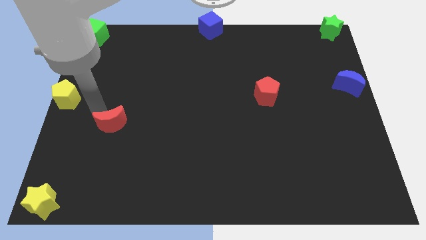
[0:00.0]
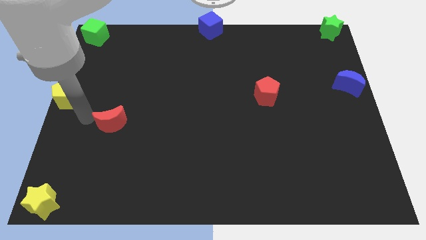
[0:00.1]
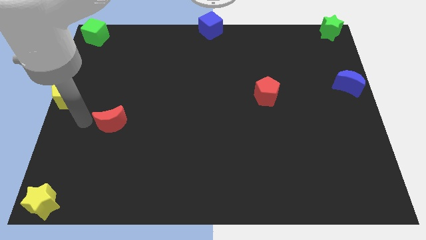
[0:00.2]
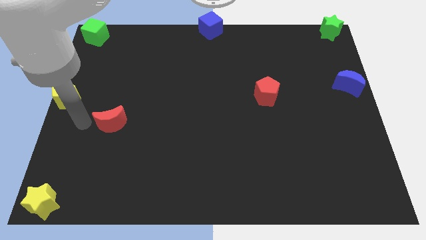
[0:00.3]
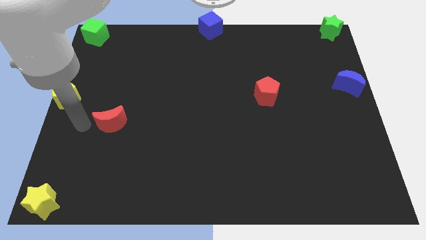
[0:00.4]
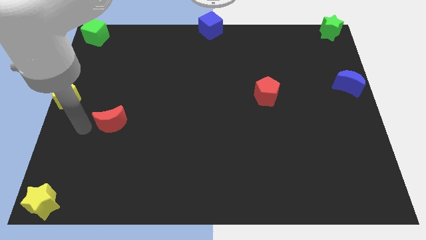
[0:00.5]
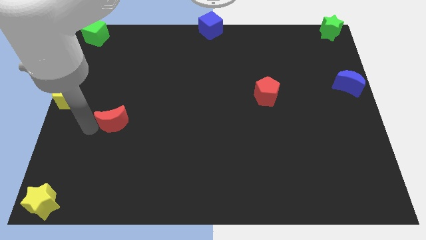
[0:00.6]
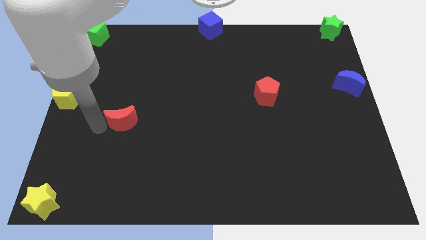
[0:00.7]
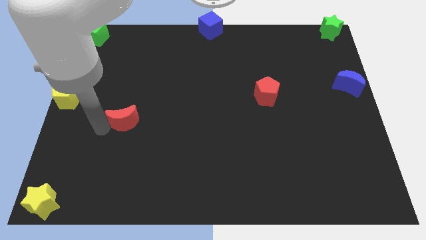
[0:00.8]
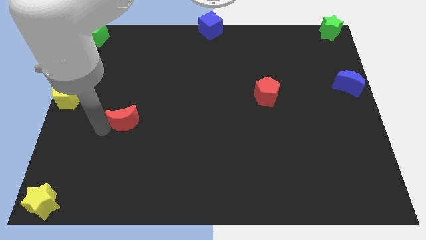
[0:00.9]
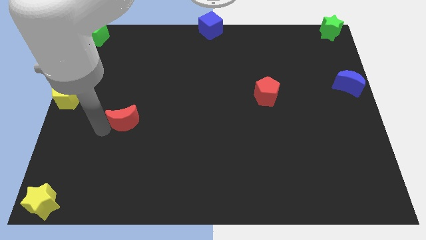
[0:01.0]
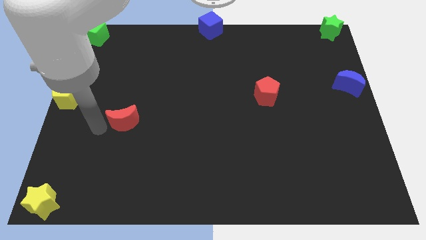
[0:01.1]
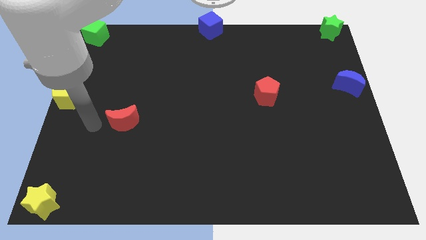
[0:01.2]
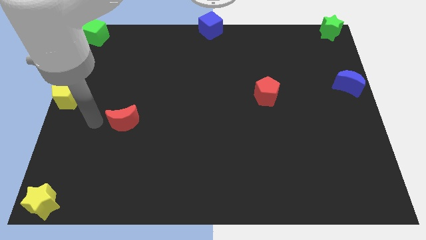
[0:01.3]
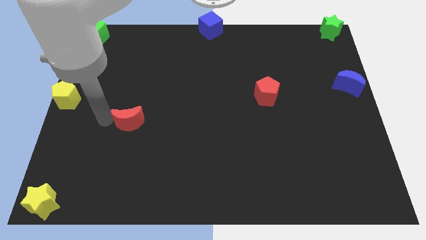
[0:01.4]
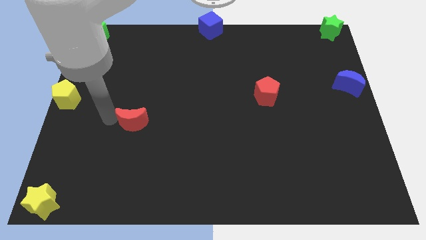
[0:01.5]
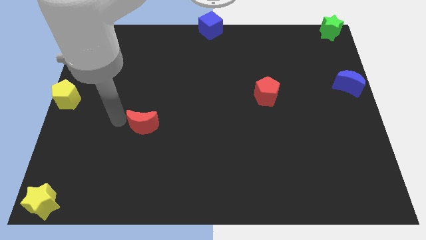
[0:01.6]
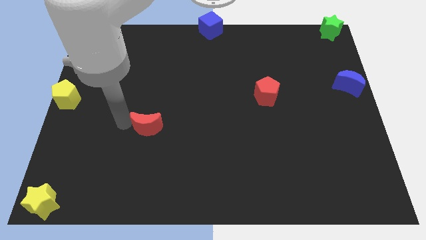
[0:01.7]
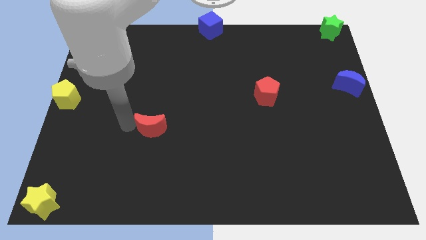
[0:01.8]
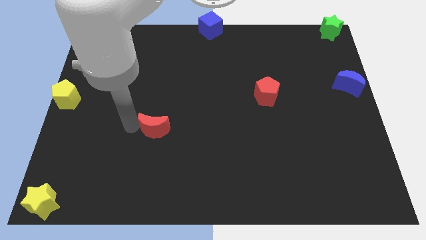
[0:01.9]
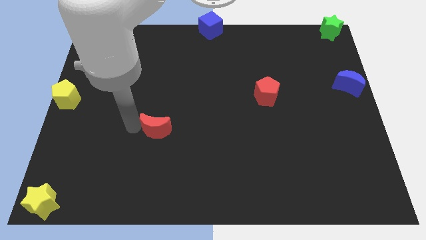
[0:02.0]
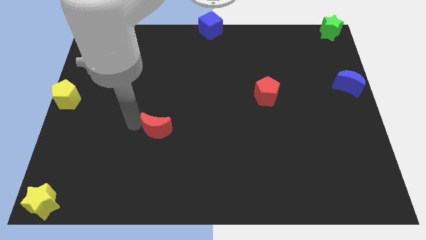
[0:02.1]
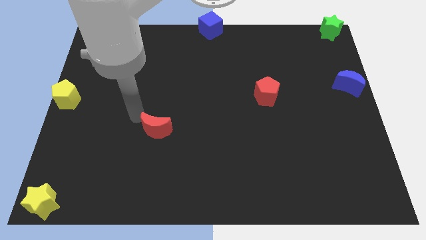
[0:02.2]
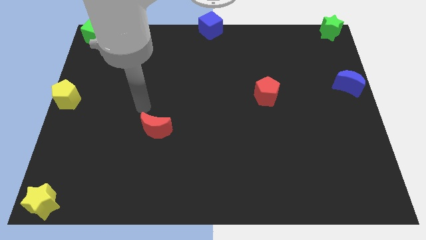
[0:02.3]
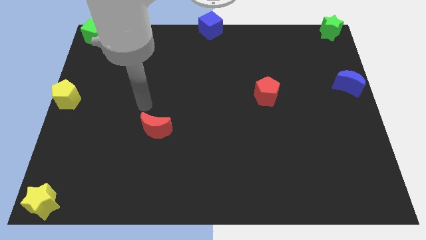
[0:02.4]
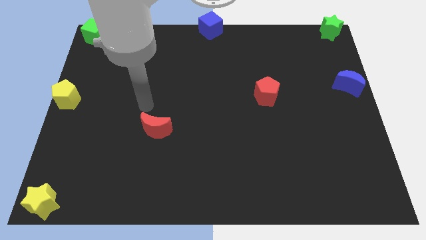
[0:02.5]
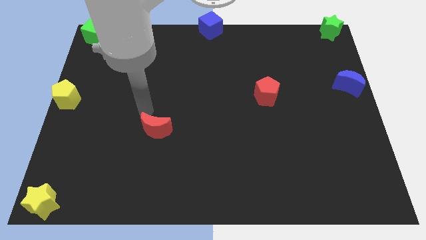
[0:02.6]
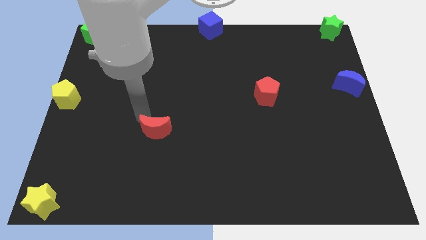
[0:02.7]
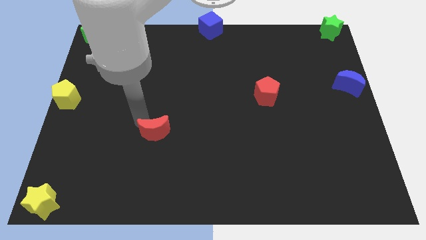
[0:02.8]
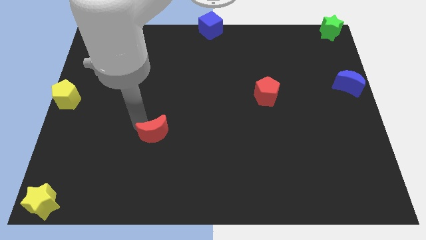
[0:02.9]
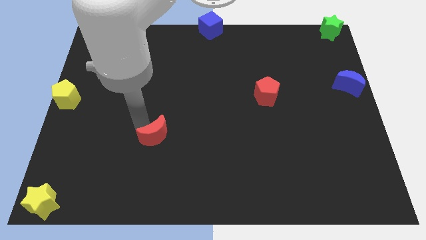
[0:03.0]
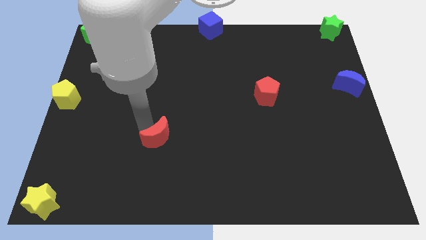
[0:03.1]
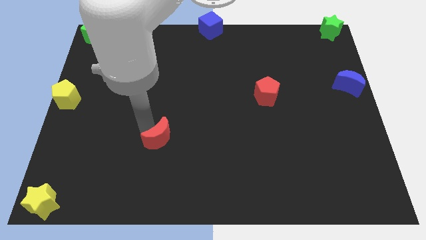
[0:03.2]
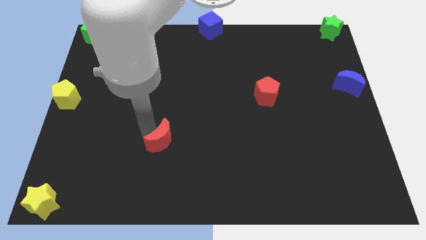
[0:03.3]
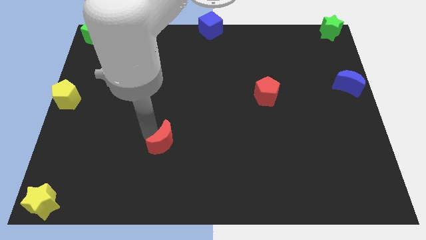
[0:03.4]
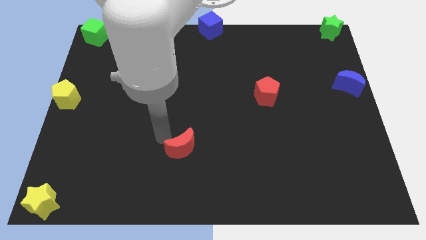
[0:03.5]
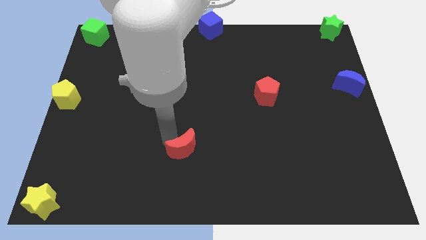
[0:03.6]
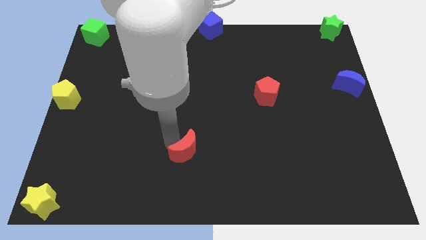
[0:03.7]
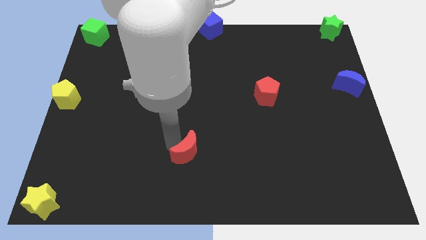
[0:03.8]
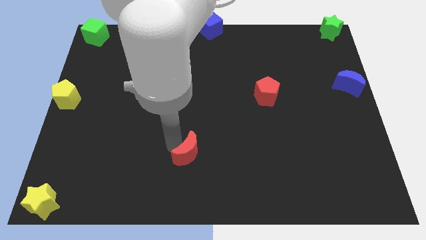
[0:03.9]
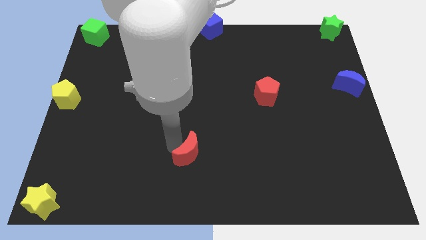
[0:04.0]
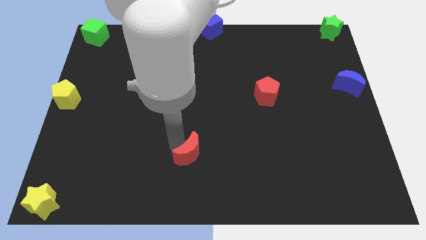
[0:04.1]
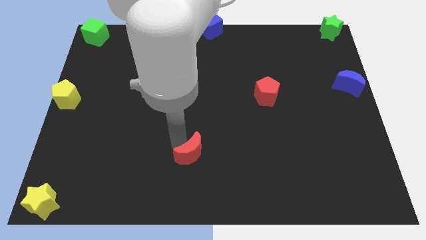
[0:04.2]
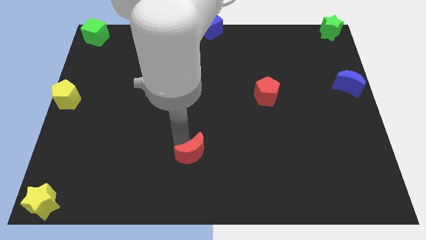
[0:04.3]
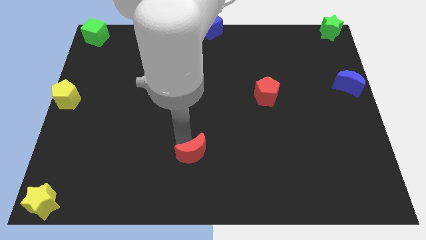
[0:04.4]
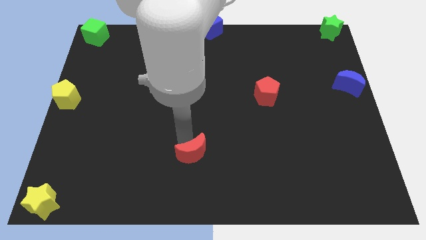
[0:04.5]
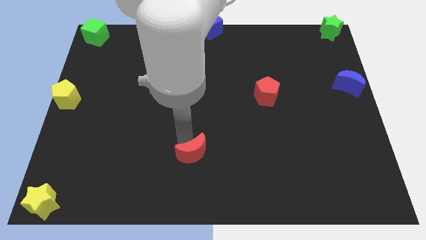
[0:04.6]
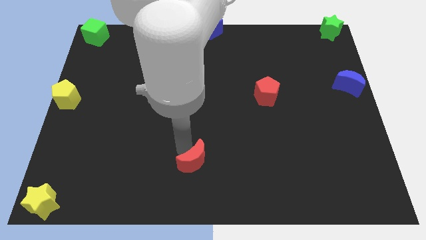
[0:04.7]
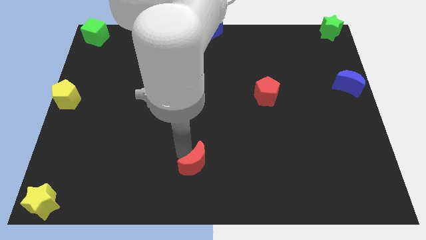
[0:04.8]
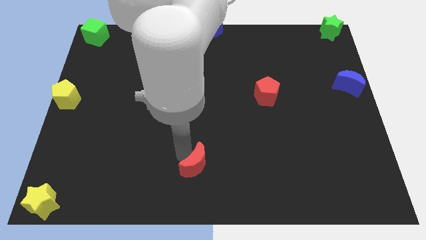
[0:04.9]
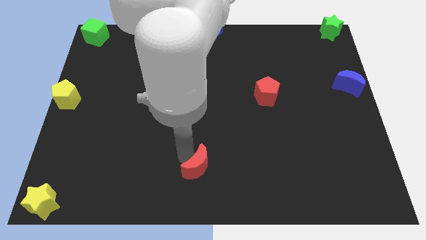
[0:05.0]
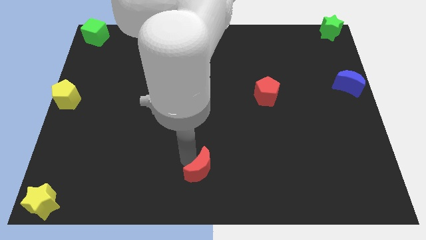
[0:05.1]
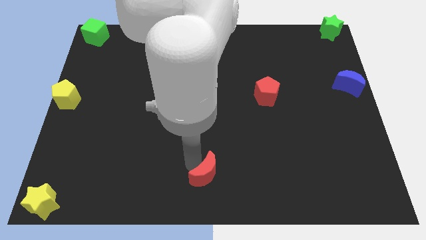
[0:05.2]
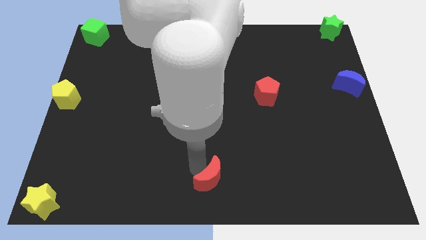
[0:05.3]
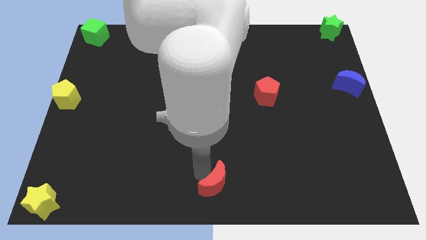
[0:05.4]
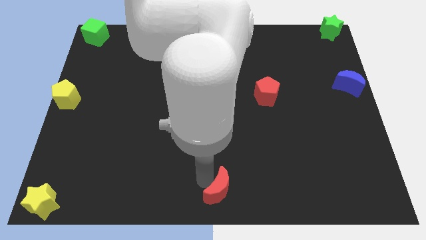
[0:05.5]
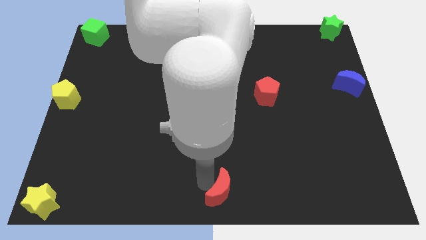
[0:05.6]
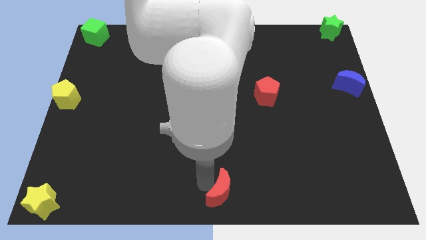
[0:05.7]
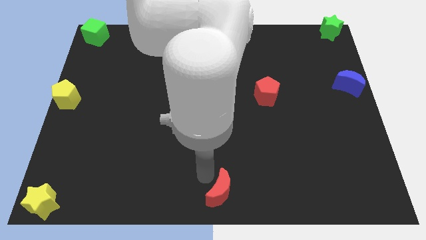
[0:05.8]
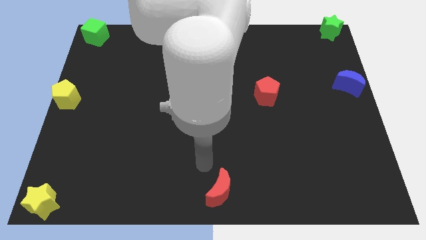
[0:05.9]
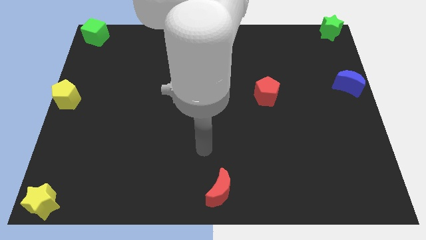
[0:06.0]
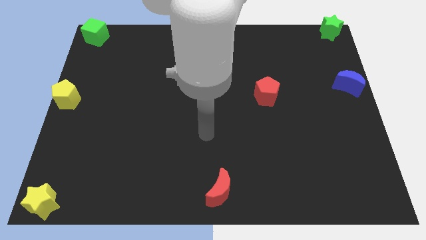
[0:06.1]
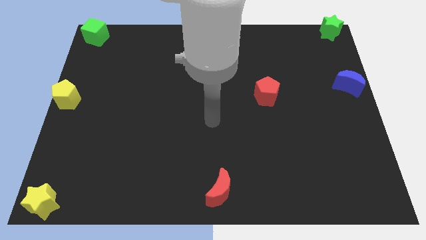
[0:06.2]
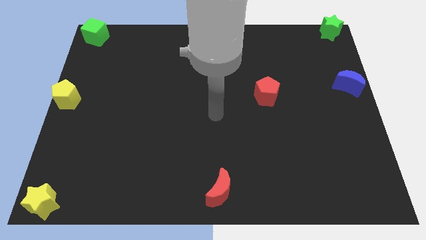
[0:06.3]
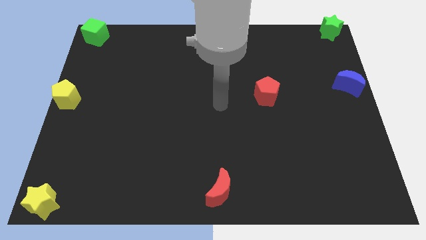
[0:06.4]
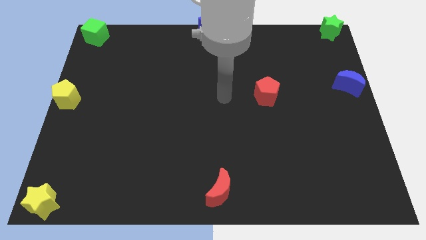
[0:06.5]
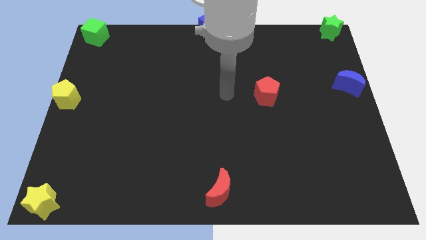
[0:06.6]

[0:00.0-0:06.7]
move red moon to the bottom middle of the board

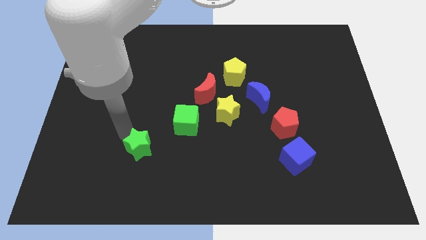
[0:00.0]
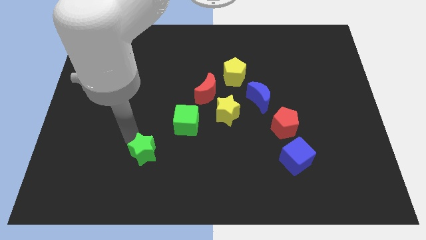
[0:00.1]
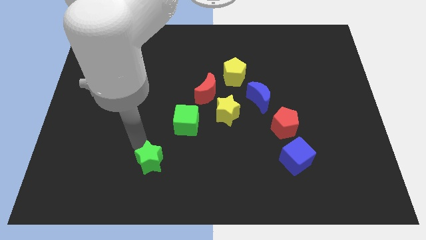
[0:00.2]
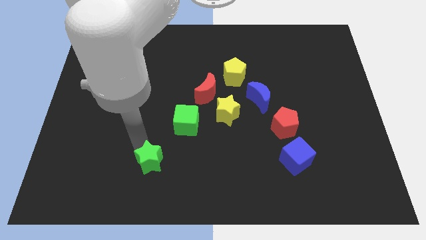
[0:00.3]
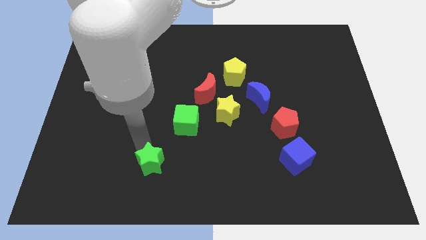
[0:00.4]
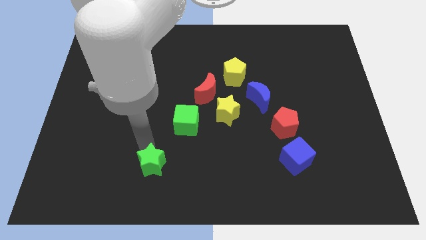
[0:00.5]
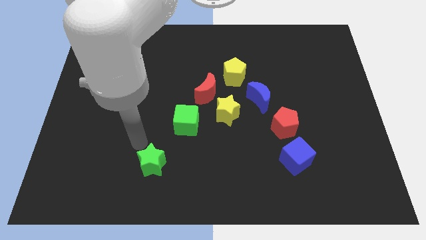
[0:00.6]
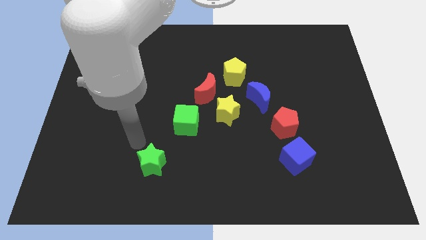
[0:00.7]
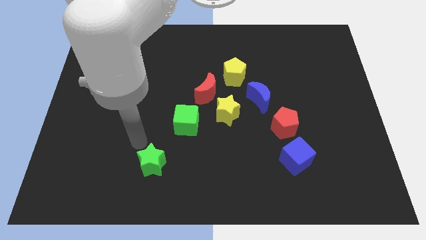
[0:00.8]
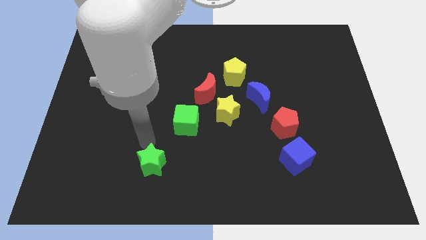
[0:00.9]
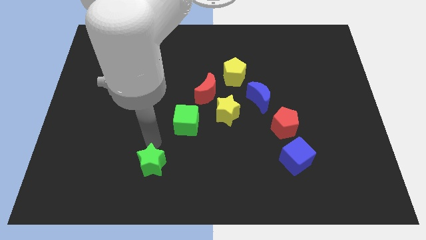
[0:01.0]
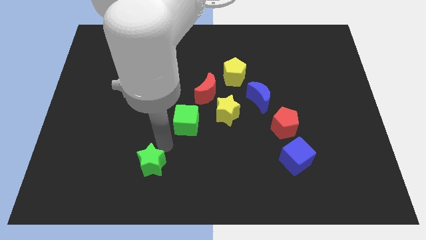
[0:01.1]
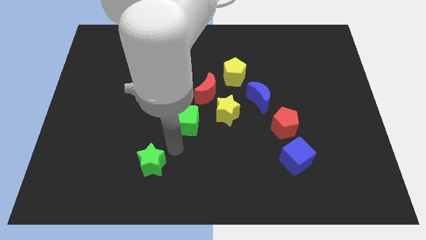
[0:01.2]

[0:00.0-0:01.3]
place the green star diagonal to the yellow star

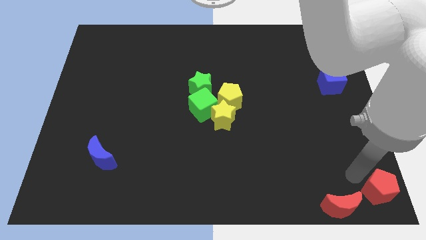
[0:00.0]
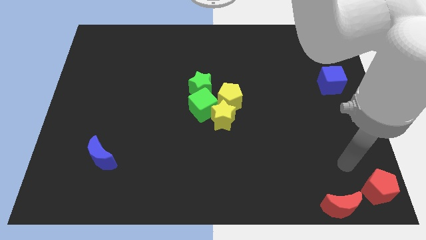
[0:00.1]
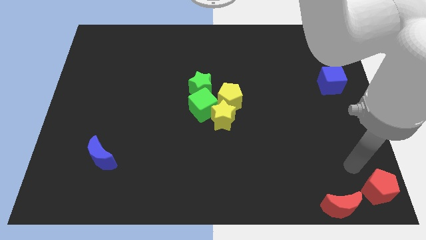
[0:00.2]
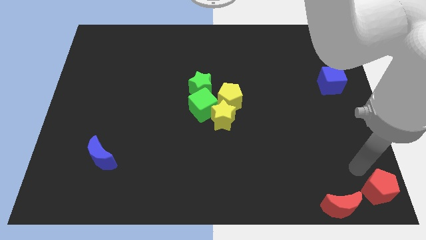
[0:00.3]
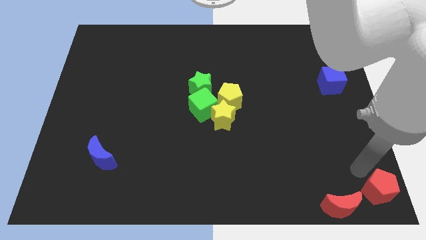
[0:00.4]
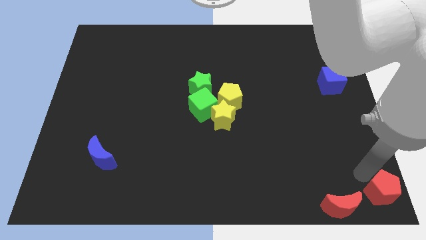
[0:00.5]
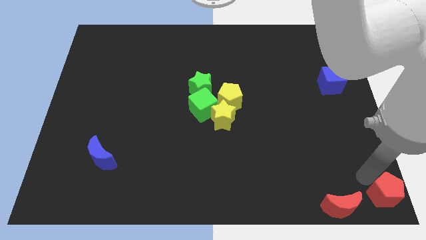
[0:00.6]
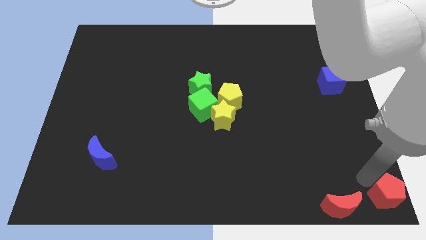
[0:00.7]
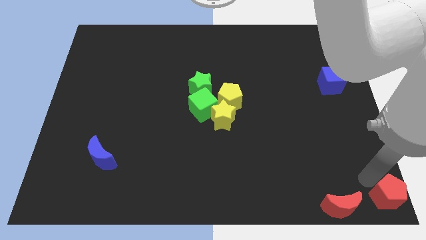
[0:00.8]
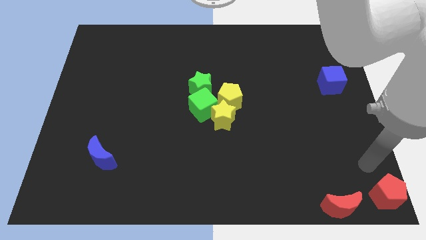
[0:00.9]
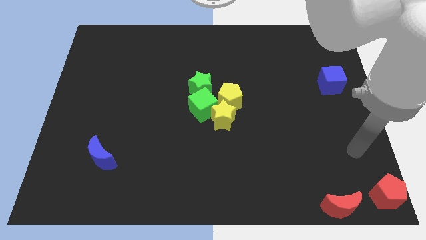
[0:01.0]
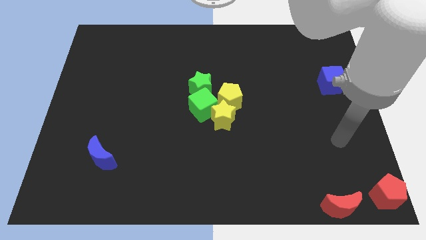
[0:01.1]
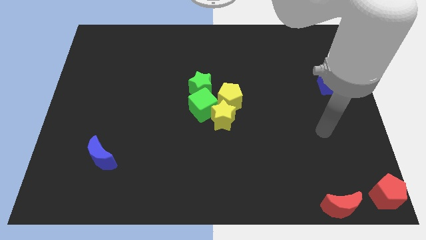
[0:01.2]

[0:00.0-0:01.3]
push the red pentagon to the bottom right corner of the board
